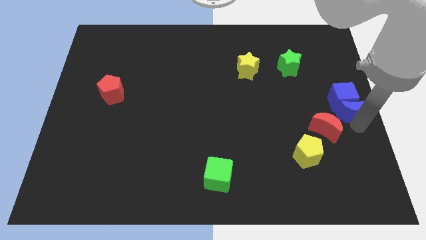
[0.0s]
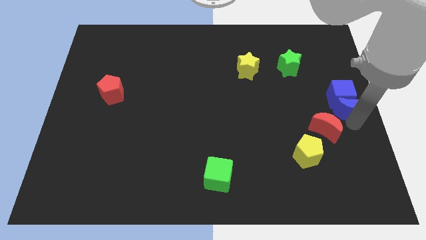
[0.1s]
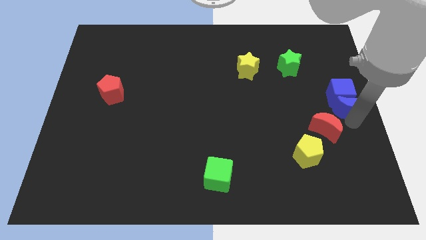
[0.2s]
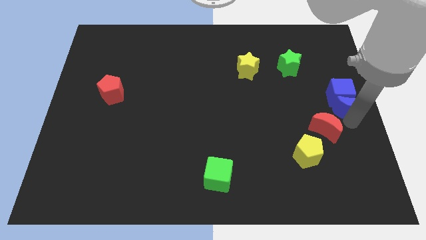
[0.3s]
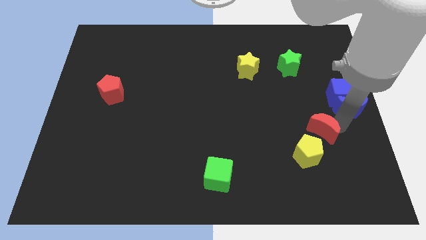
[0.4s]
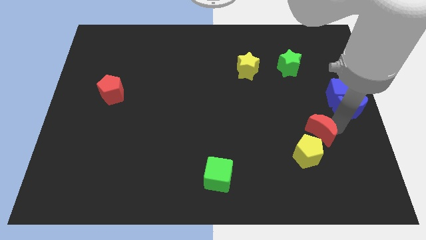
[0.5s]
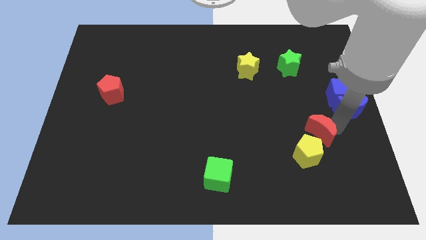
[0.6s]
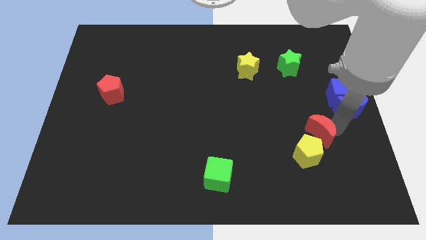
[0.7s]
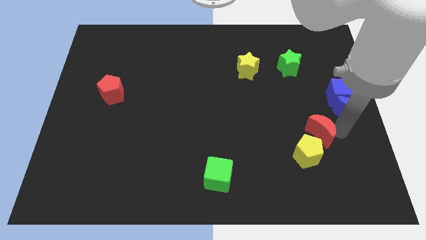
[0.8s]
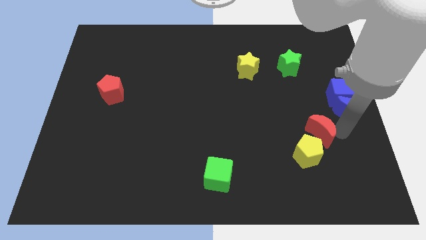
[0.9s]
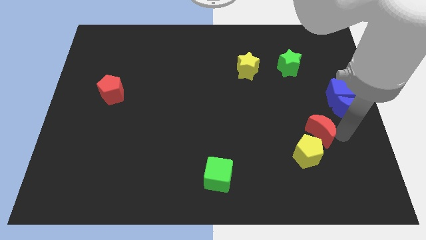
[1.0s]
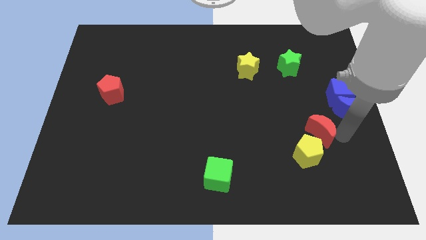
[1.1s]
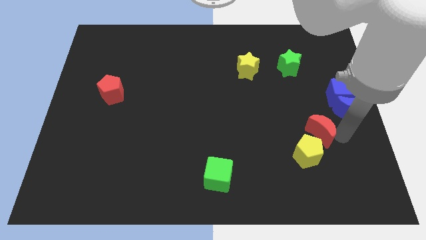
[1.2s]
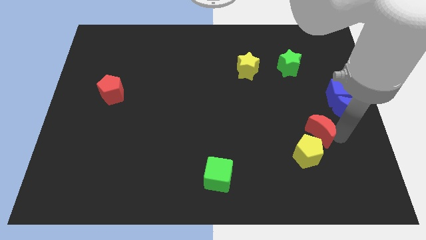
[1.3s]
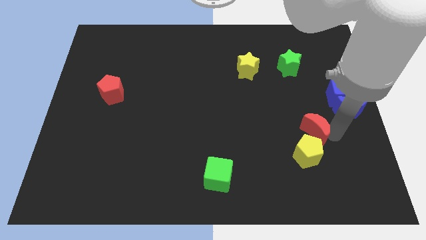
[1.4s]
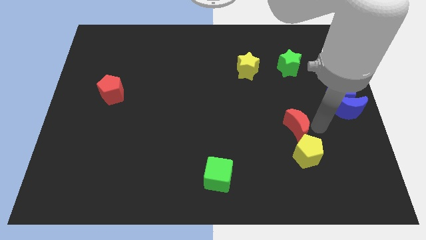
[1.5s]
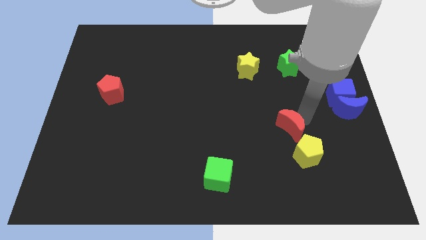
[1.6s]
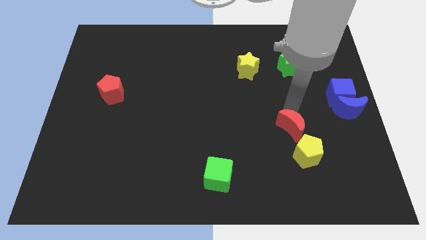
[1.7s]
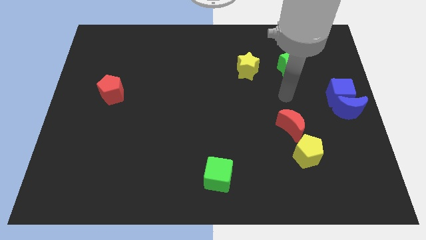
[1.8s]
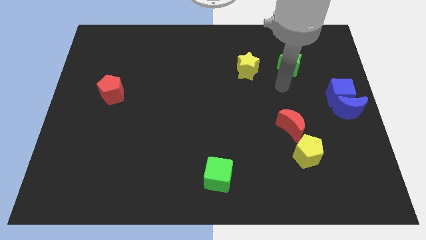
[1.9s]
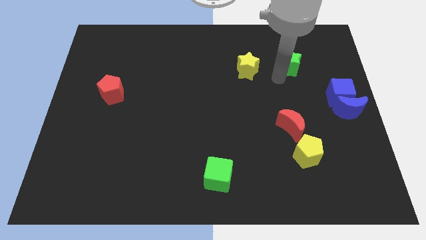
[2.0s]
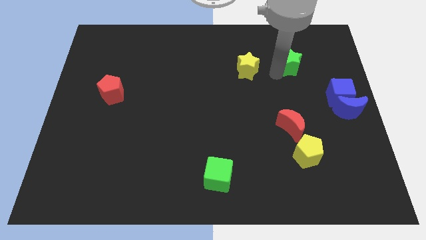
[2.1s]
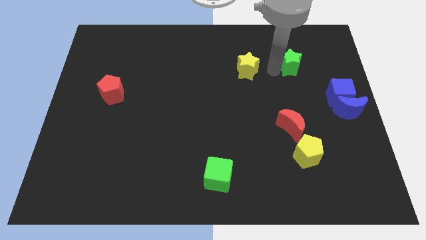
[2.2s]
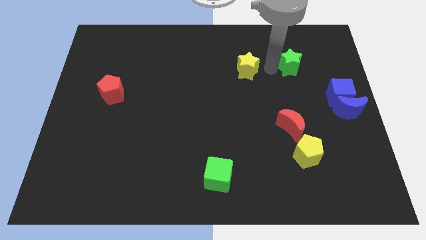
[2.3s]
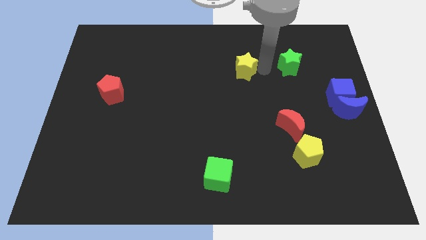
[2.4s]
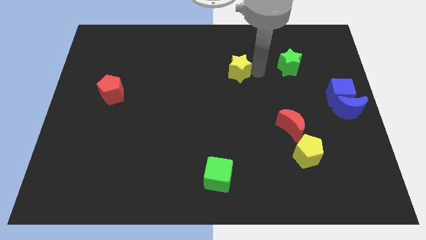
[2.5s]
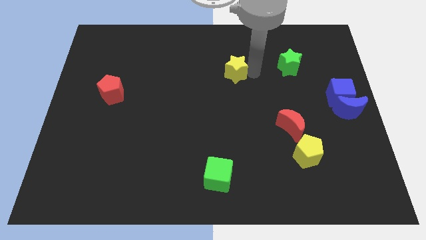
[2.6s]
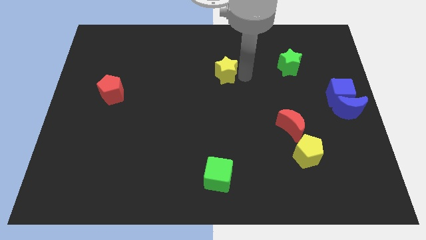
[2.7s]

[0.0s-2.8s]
move the yellow star above green cube

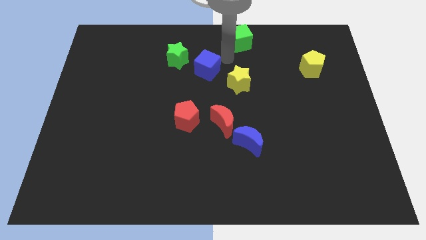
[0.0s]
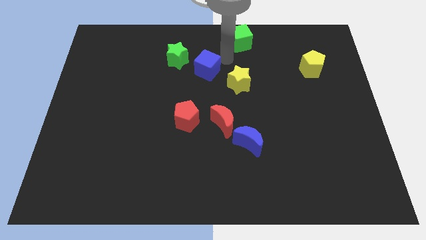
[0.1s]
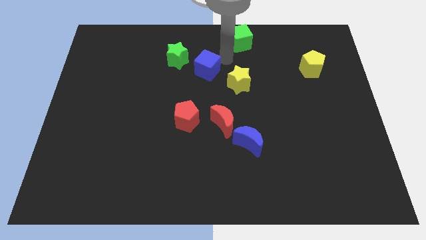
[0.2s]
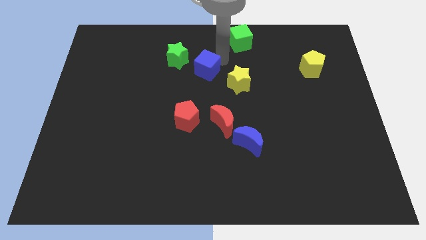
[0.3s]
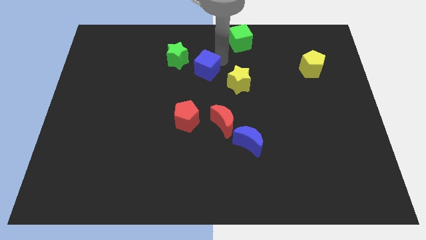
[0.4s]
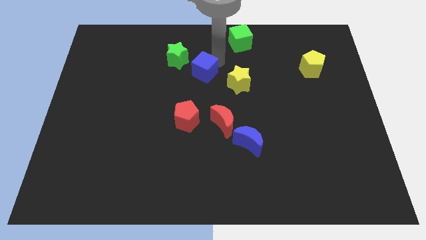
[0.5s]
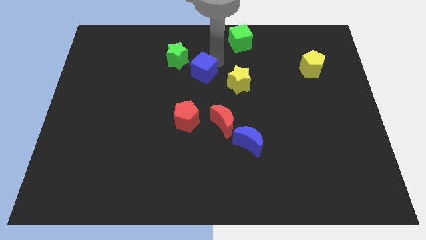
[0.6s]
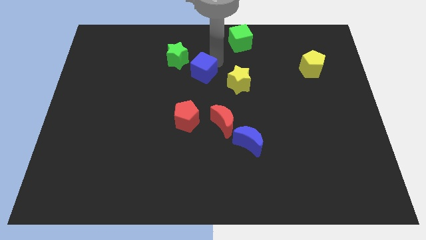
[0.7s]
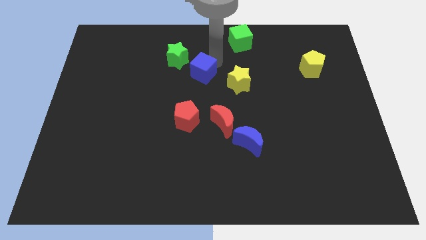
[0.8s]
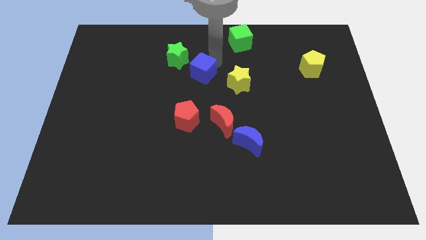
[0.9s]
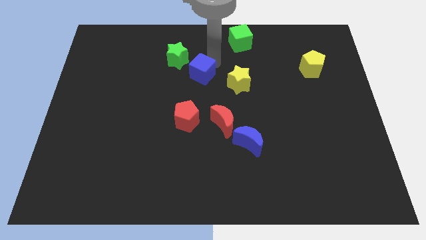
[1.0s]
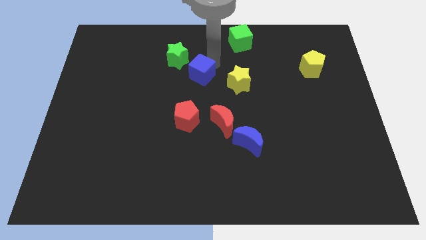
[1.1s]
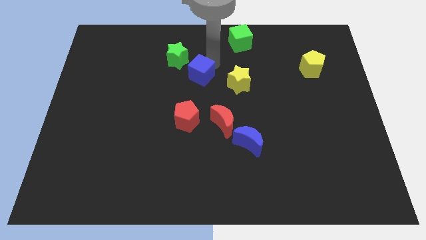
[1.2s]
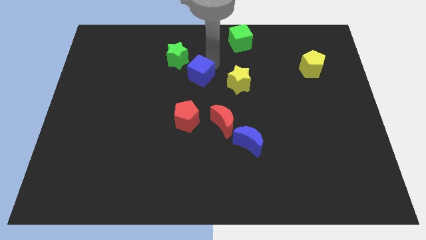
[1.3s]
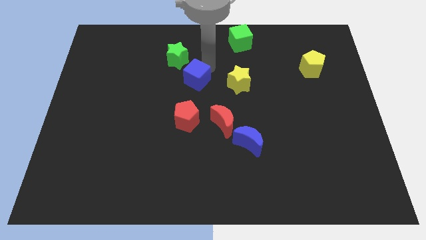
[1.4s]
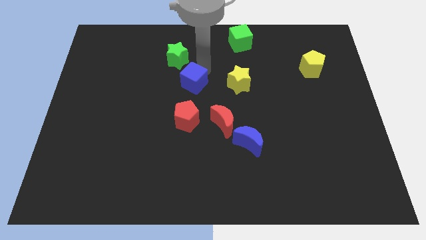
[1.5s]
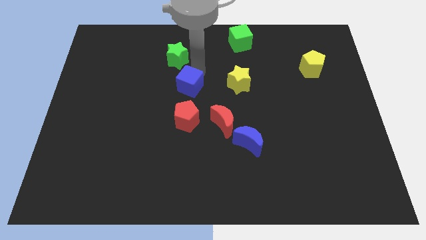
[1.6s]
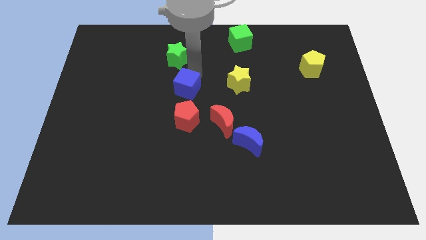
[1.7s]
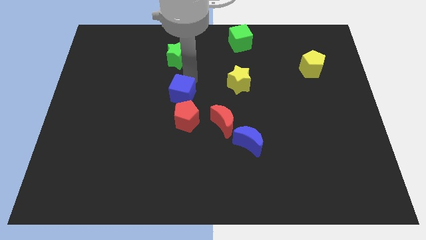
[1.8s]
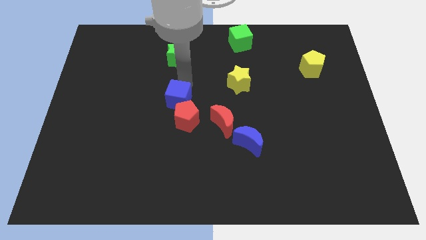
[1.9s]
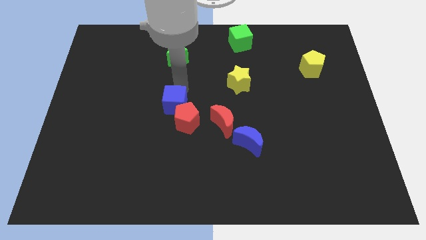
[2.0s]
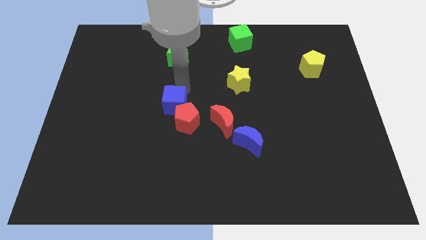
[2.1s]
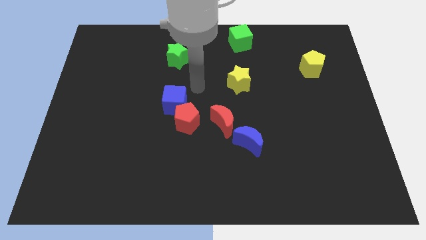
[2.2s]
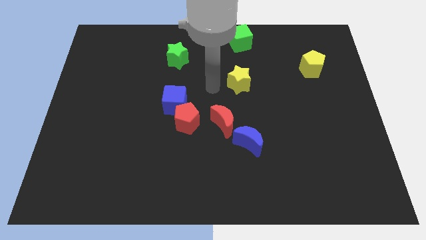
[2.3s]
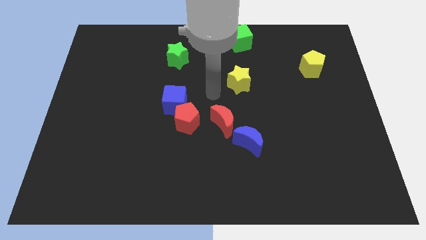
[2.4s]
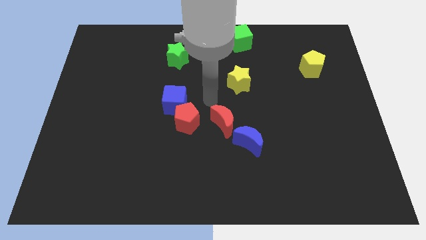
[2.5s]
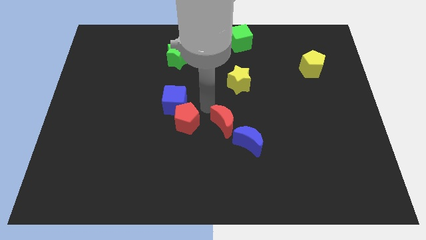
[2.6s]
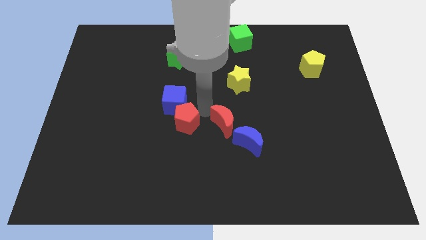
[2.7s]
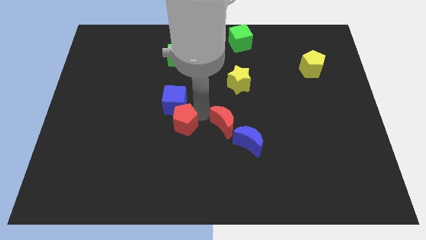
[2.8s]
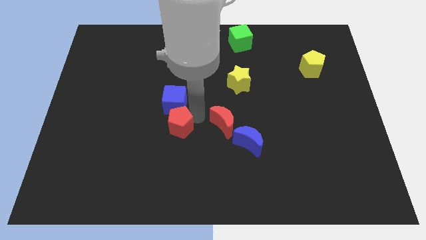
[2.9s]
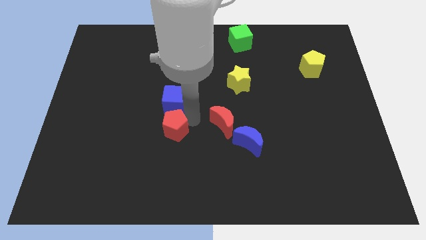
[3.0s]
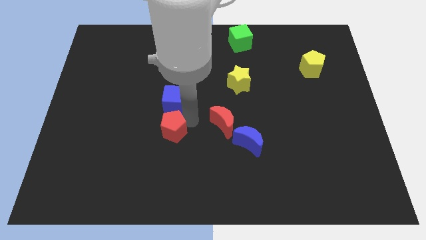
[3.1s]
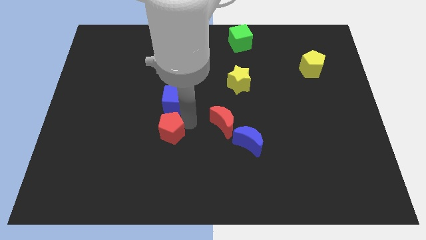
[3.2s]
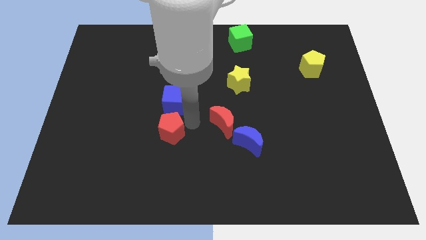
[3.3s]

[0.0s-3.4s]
push the red pentagon with the blue cube towards the bottom center of the board

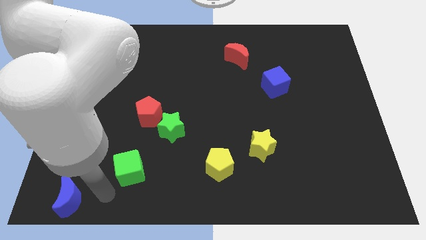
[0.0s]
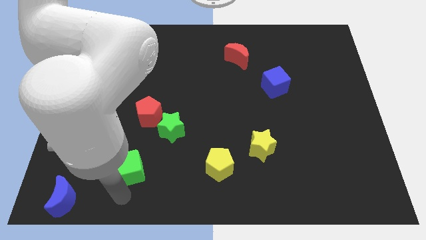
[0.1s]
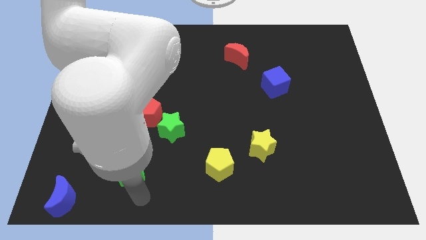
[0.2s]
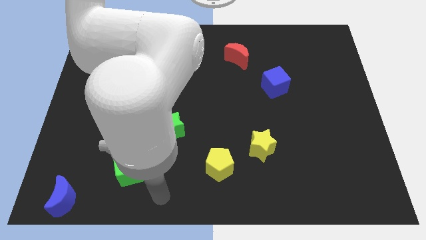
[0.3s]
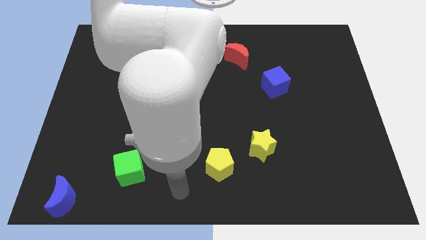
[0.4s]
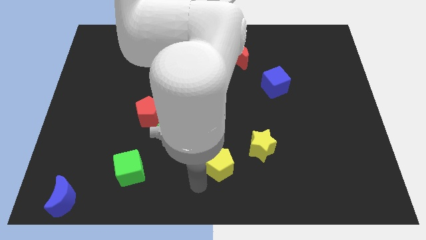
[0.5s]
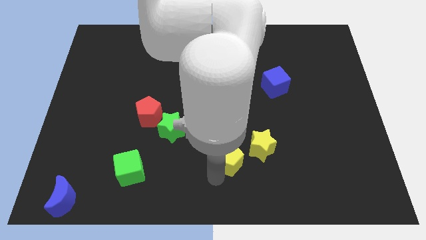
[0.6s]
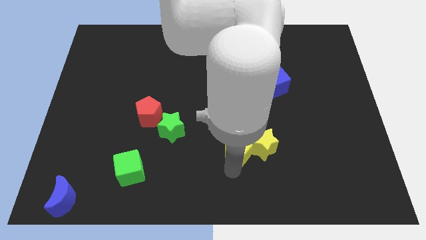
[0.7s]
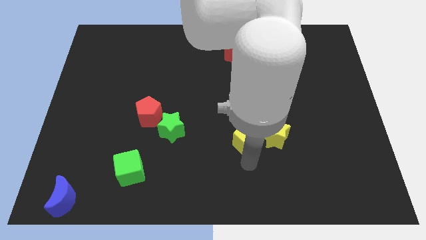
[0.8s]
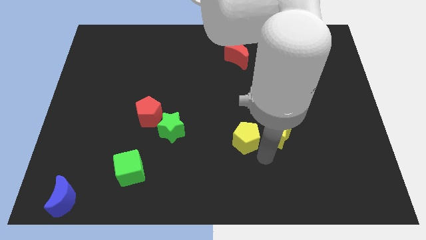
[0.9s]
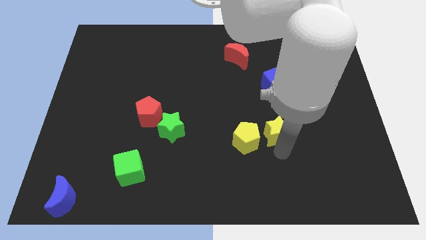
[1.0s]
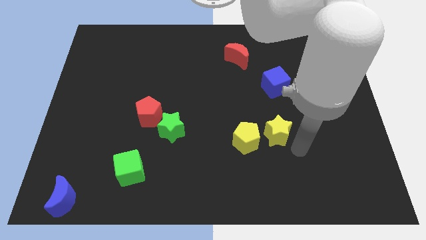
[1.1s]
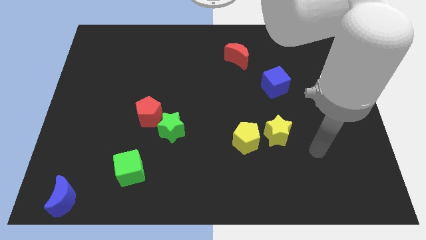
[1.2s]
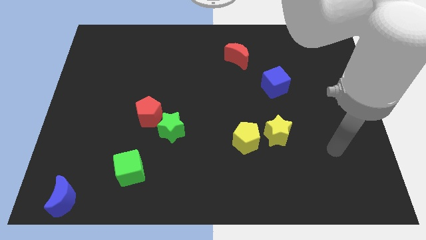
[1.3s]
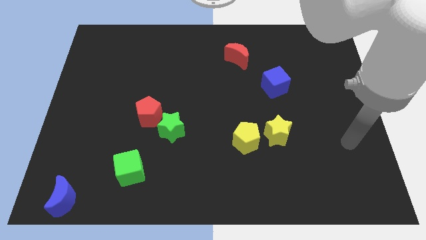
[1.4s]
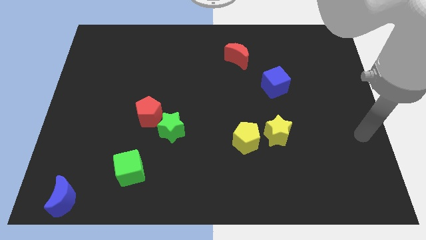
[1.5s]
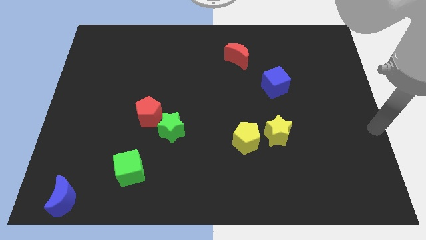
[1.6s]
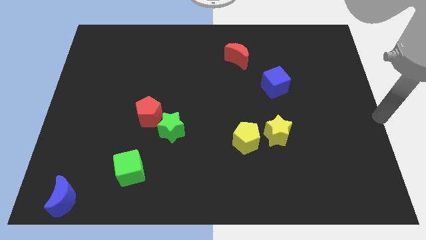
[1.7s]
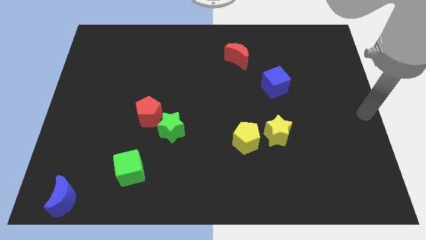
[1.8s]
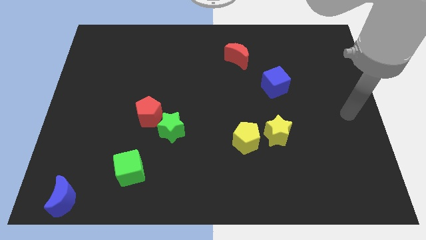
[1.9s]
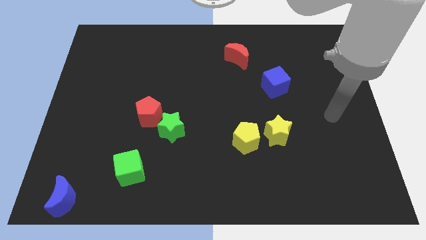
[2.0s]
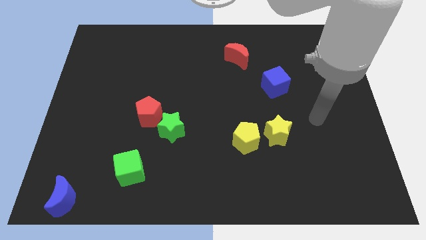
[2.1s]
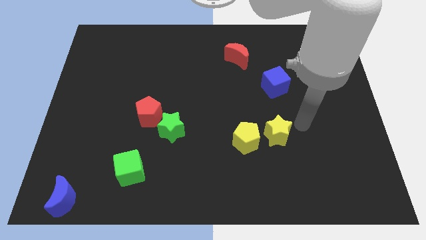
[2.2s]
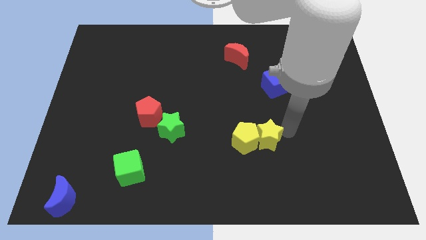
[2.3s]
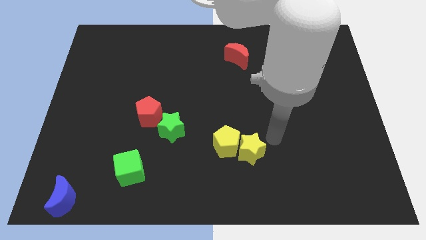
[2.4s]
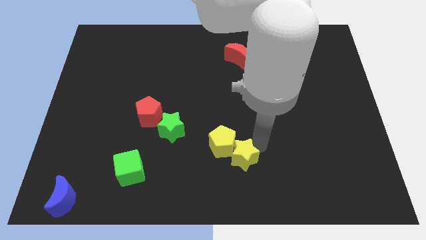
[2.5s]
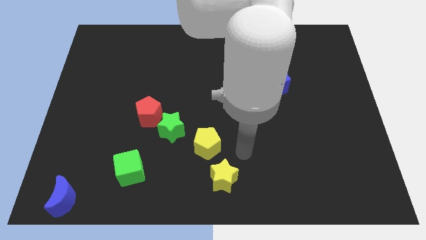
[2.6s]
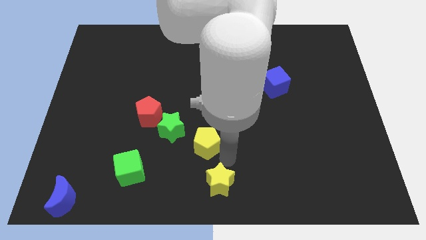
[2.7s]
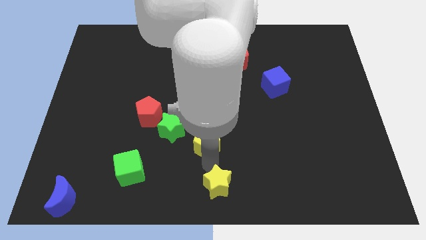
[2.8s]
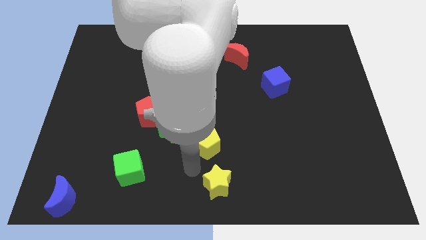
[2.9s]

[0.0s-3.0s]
push yellow star towards the bottom of the board
